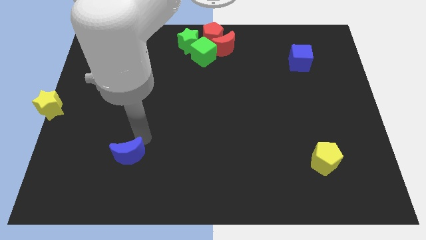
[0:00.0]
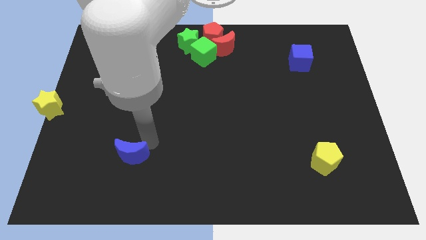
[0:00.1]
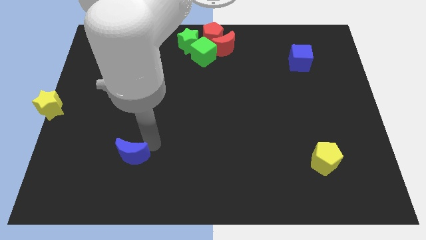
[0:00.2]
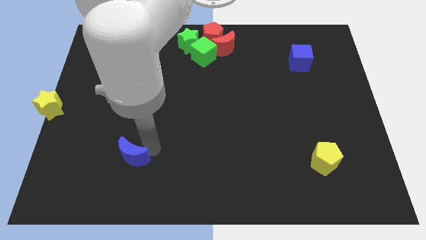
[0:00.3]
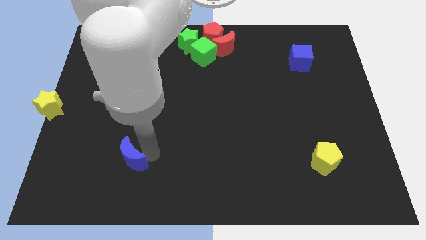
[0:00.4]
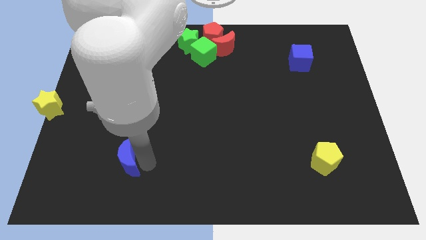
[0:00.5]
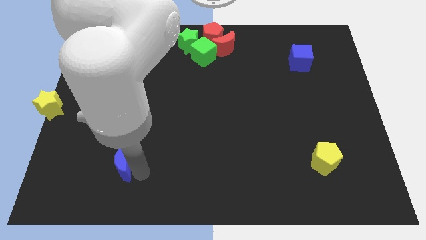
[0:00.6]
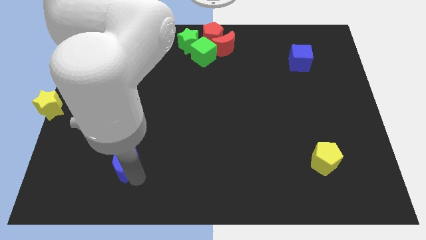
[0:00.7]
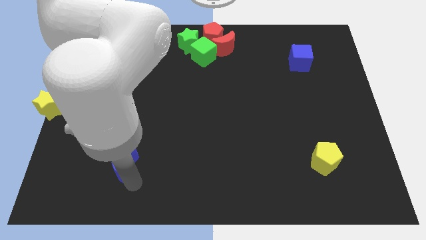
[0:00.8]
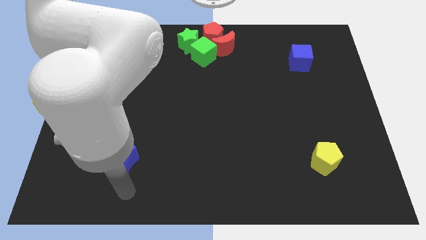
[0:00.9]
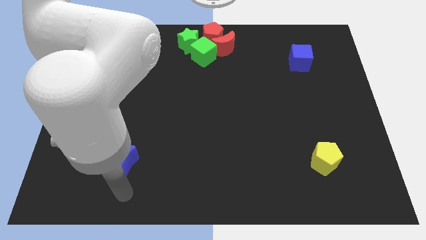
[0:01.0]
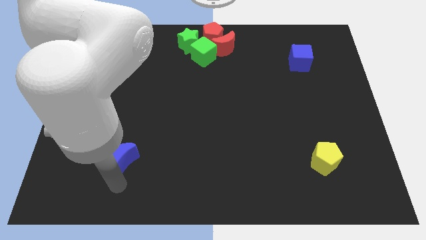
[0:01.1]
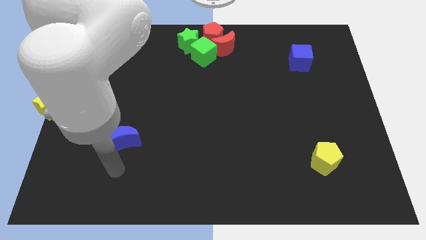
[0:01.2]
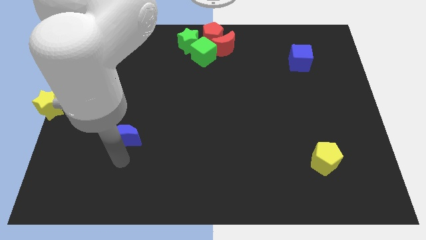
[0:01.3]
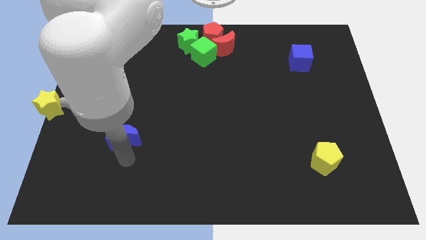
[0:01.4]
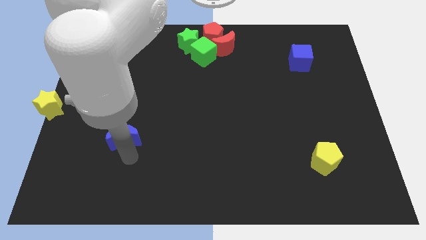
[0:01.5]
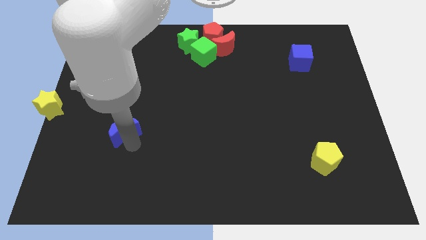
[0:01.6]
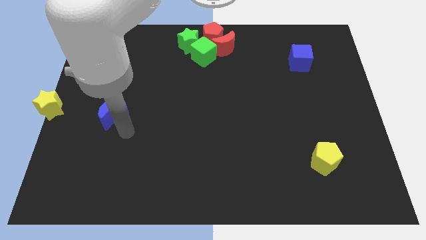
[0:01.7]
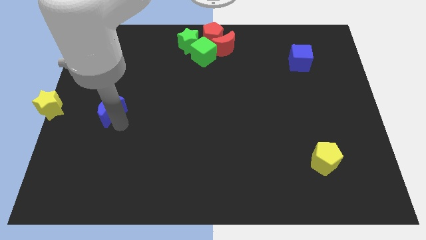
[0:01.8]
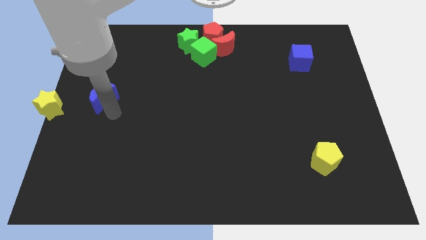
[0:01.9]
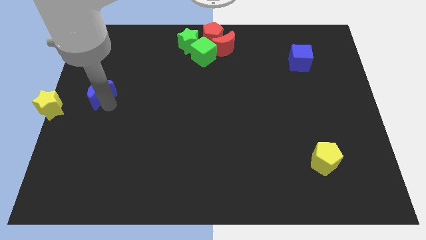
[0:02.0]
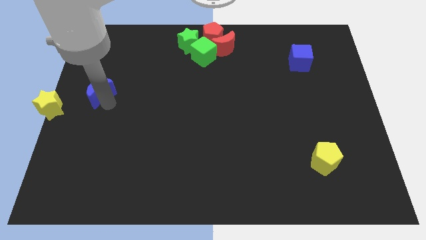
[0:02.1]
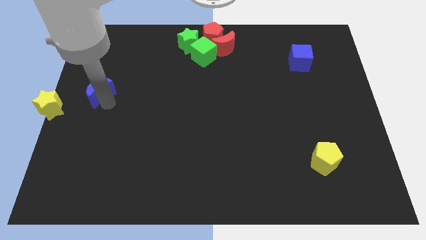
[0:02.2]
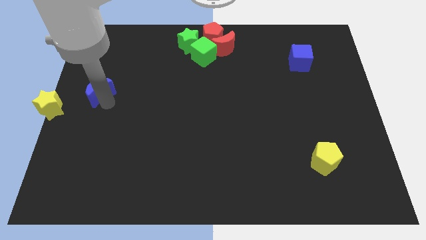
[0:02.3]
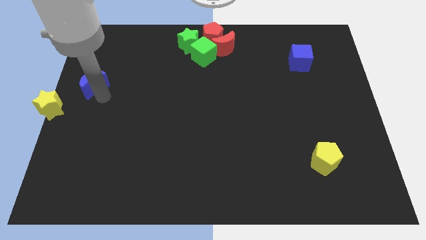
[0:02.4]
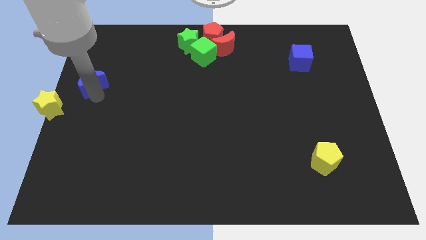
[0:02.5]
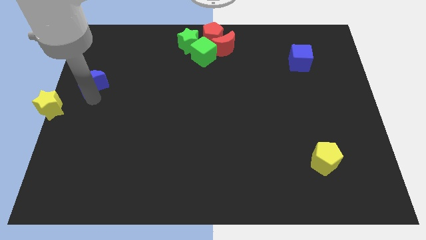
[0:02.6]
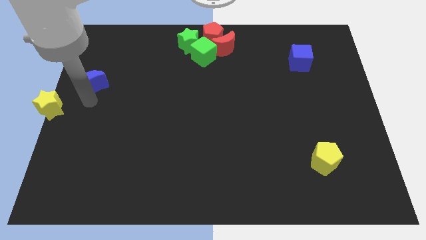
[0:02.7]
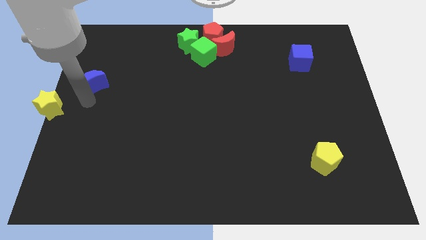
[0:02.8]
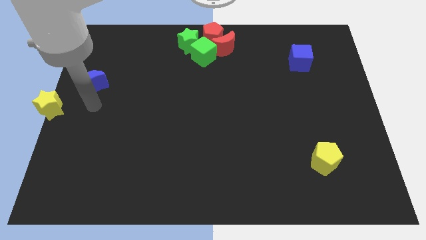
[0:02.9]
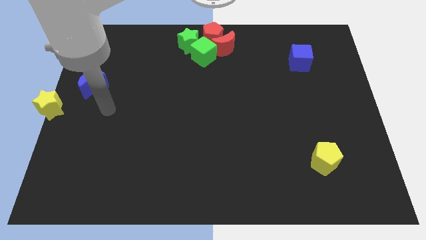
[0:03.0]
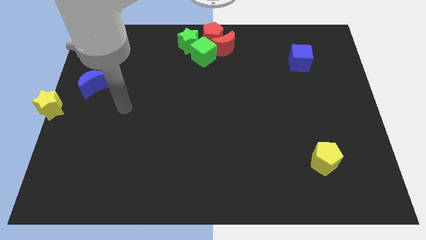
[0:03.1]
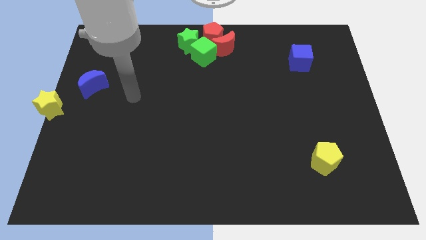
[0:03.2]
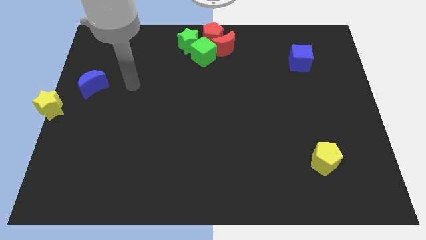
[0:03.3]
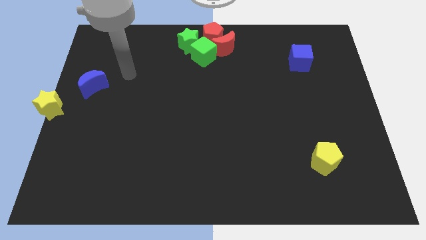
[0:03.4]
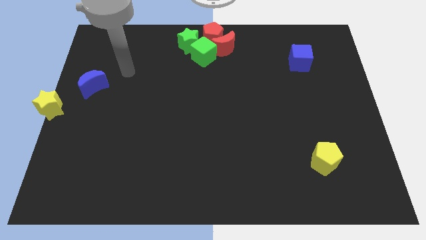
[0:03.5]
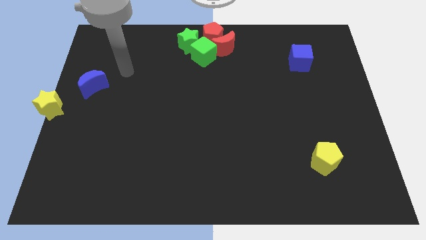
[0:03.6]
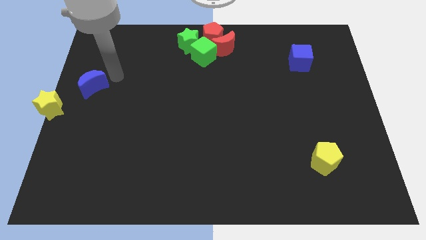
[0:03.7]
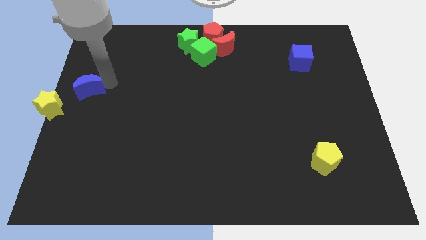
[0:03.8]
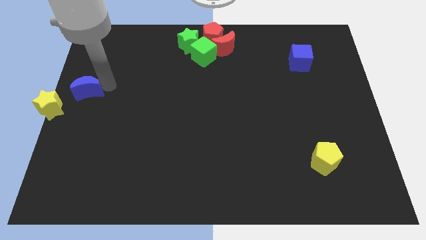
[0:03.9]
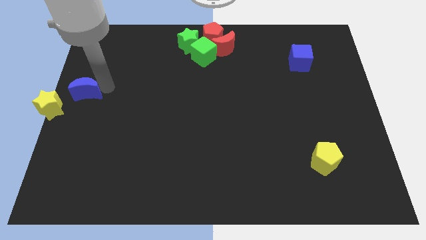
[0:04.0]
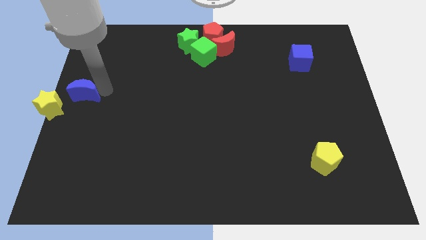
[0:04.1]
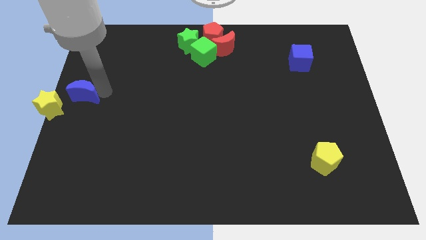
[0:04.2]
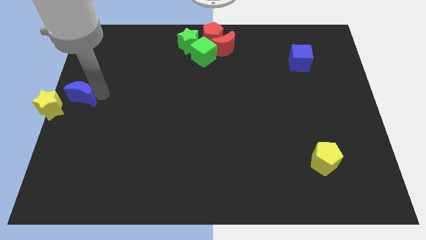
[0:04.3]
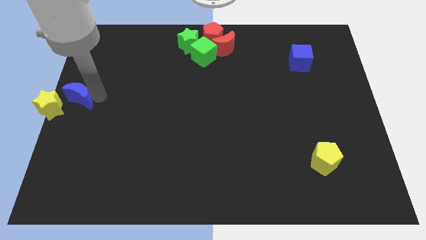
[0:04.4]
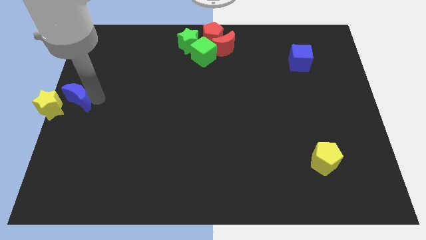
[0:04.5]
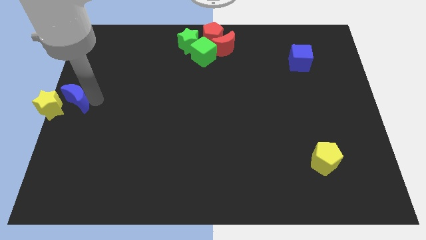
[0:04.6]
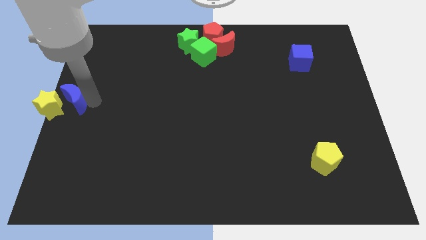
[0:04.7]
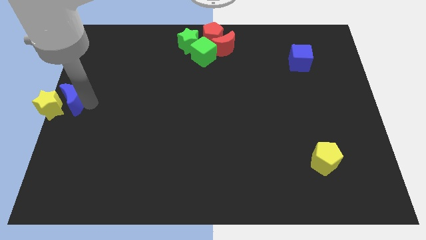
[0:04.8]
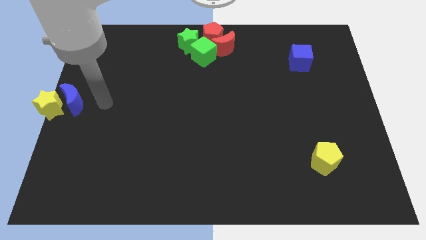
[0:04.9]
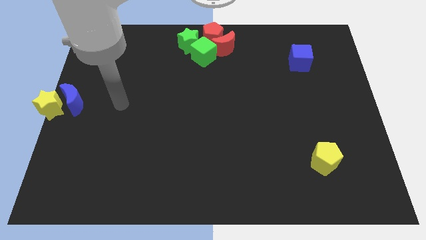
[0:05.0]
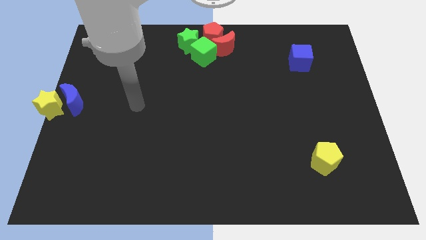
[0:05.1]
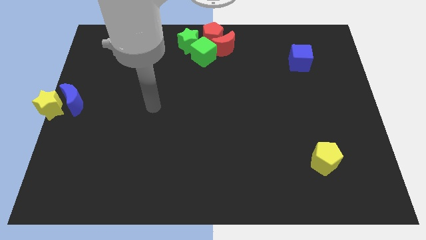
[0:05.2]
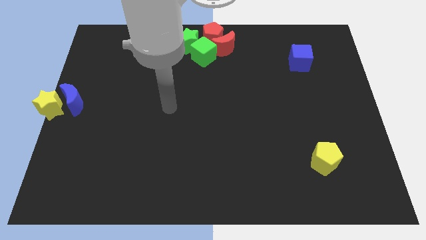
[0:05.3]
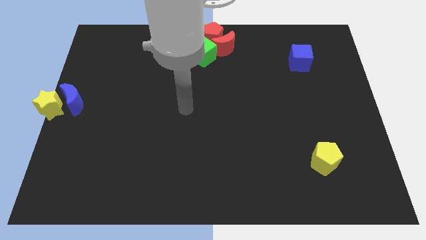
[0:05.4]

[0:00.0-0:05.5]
move blue moon right beside the yellow star

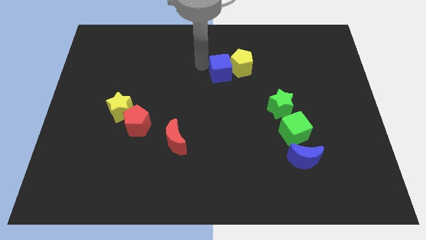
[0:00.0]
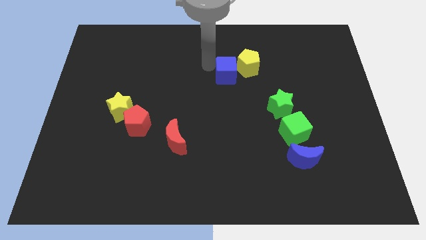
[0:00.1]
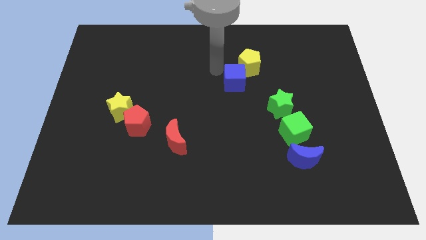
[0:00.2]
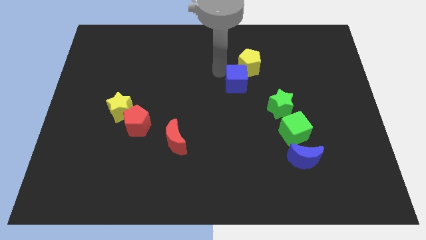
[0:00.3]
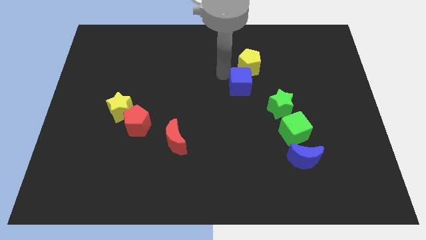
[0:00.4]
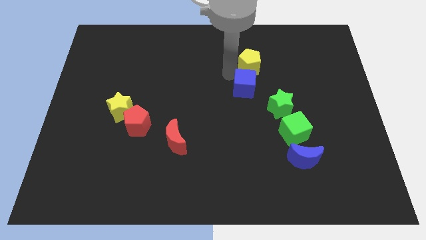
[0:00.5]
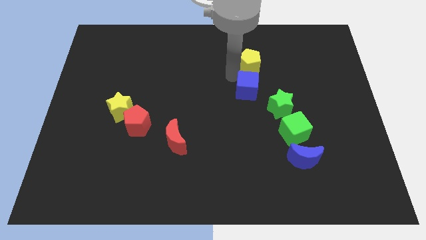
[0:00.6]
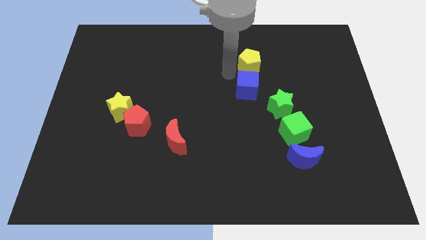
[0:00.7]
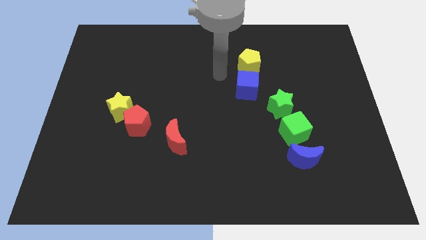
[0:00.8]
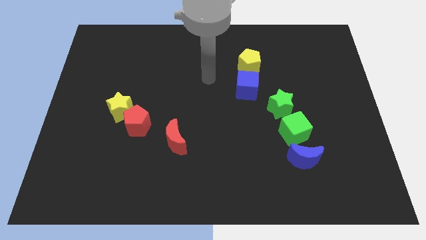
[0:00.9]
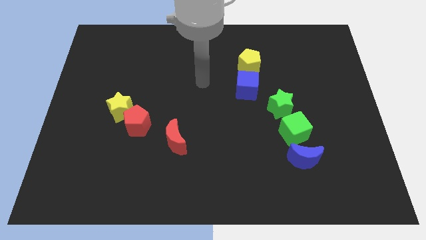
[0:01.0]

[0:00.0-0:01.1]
slide blue cube below the yellow pentagon

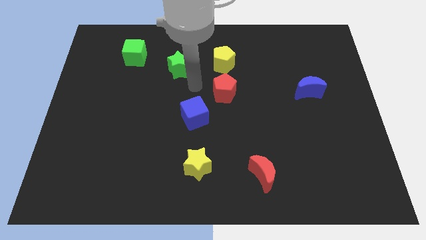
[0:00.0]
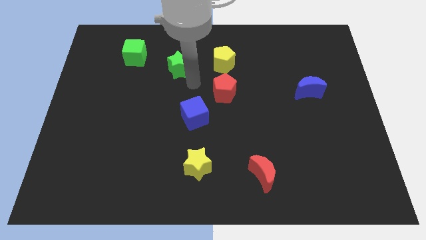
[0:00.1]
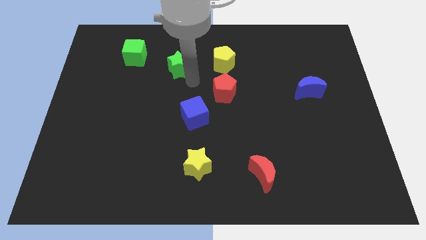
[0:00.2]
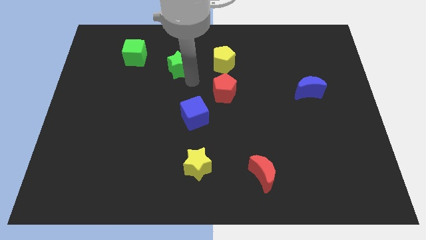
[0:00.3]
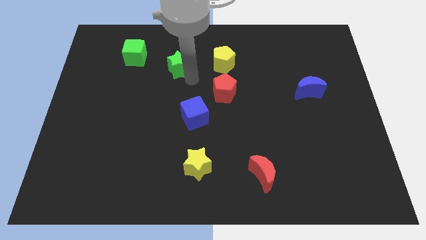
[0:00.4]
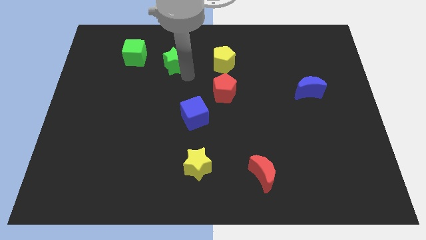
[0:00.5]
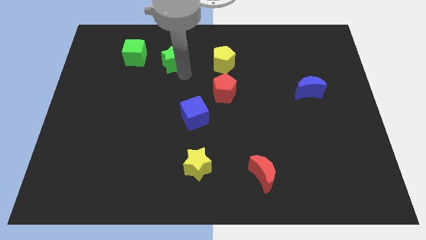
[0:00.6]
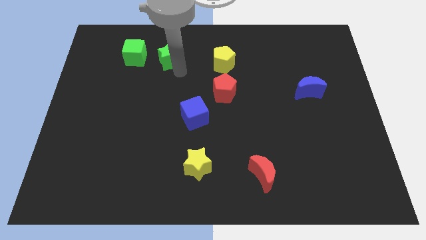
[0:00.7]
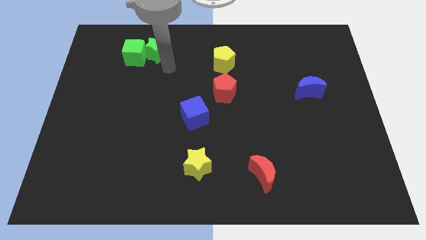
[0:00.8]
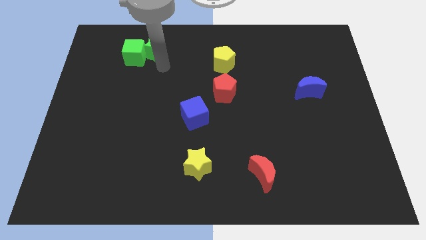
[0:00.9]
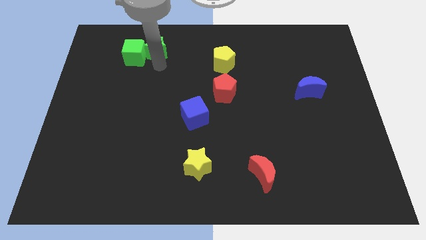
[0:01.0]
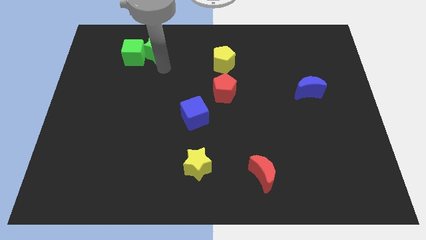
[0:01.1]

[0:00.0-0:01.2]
push green star towards green cube

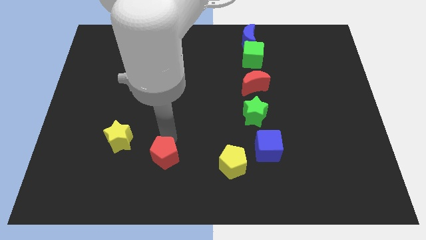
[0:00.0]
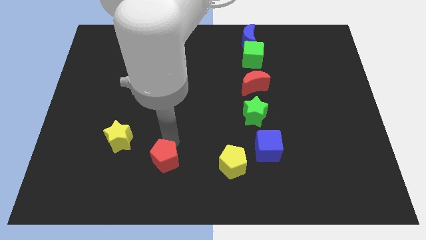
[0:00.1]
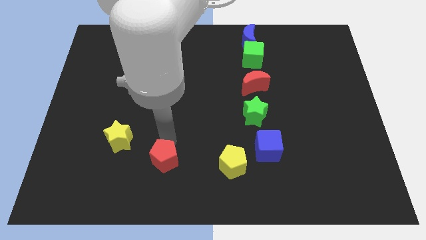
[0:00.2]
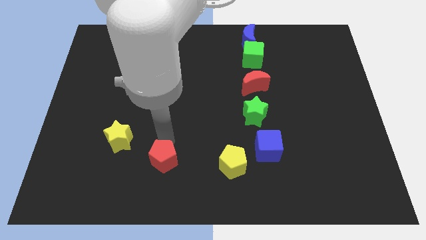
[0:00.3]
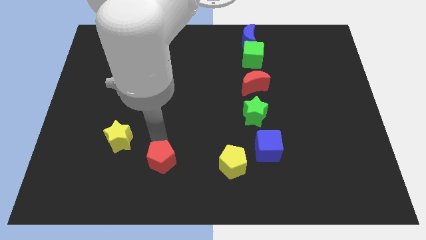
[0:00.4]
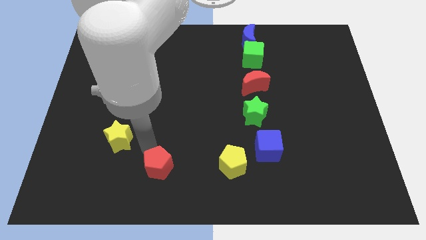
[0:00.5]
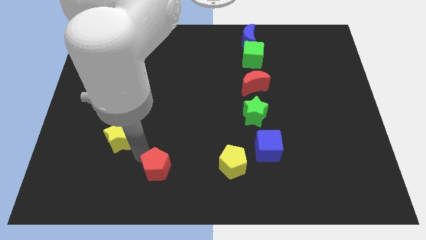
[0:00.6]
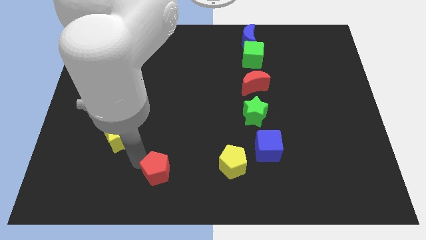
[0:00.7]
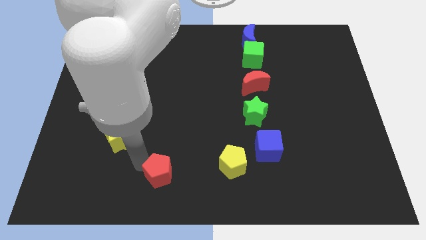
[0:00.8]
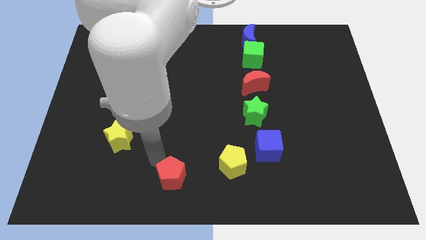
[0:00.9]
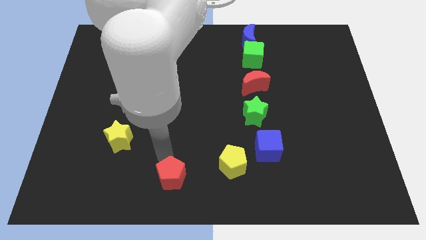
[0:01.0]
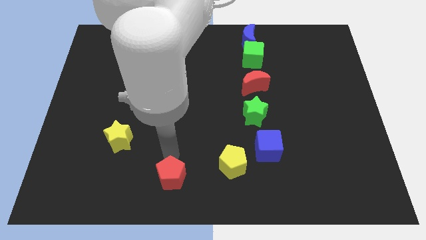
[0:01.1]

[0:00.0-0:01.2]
push red pentagon towards bottom center
